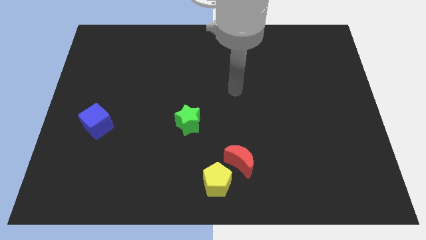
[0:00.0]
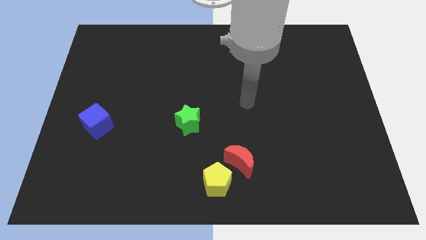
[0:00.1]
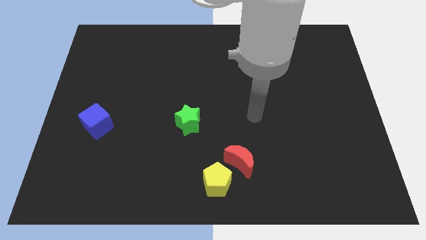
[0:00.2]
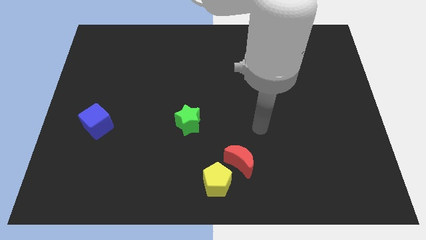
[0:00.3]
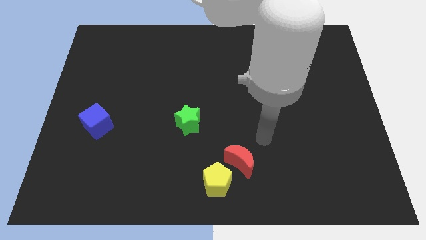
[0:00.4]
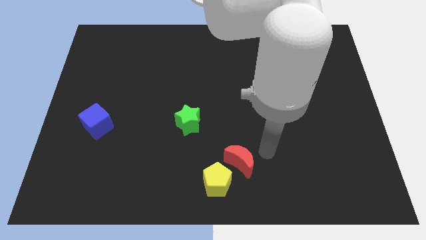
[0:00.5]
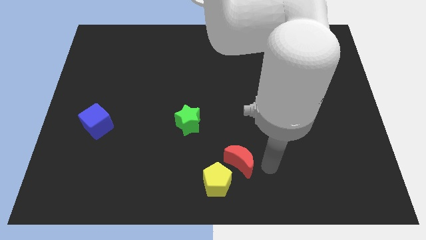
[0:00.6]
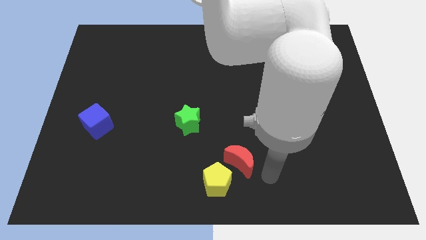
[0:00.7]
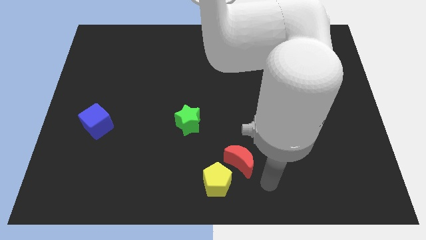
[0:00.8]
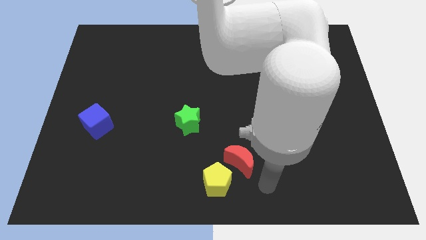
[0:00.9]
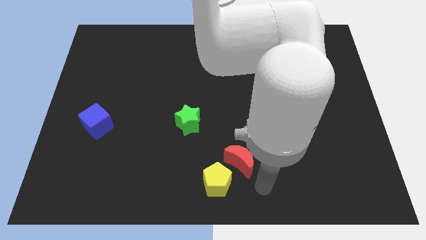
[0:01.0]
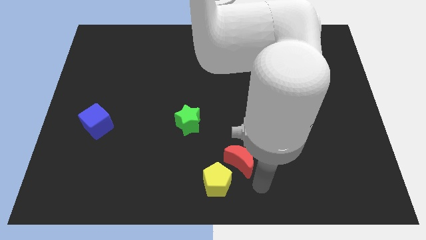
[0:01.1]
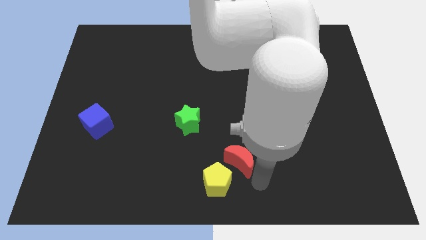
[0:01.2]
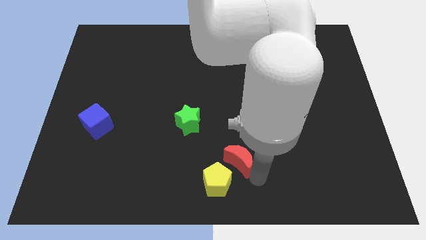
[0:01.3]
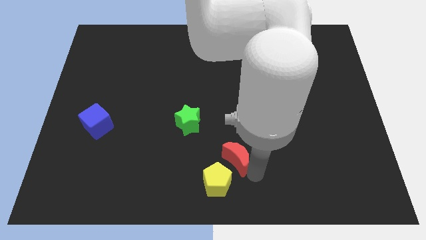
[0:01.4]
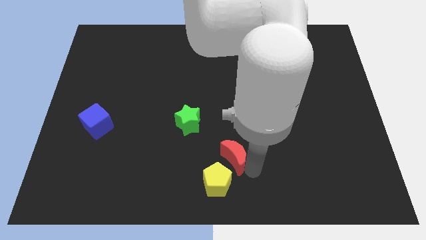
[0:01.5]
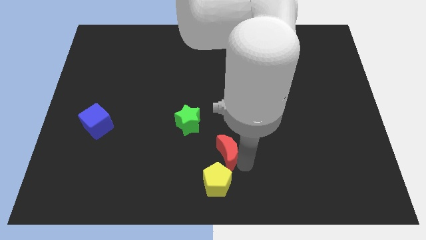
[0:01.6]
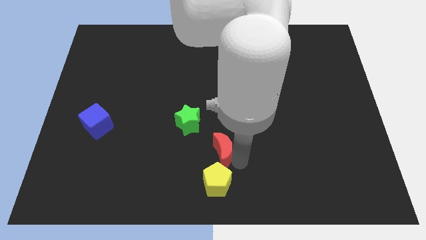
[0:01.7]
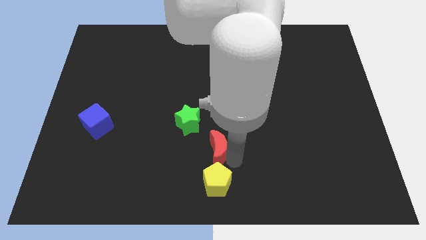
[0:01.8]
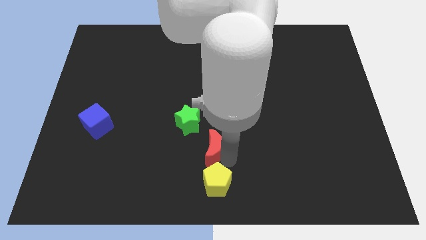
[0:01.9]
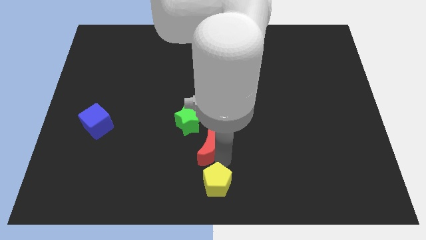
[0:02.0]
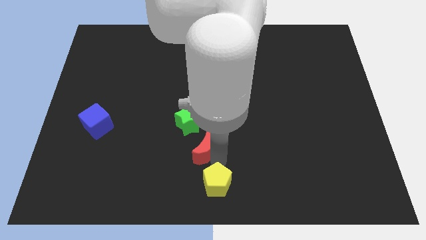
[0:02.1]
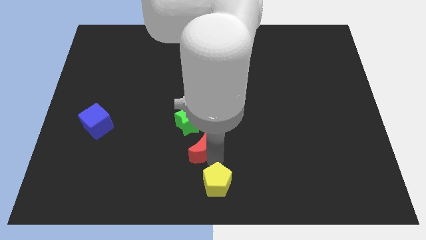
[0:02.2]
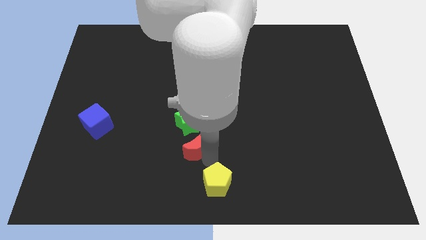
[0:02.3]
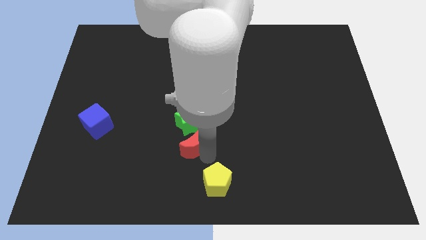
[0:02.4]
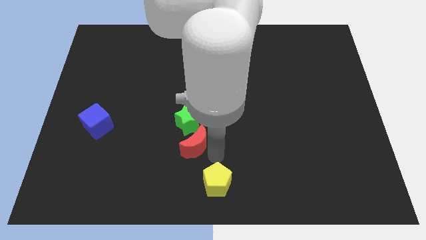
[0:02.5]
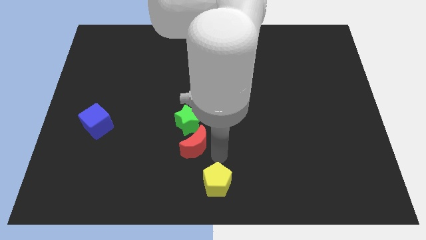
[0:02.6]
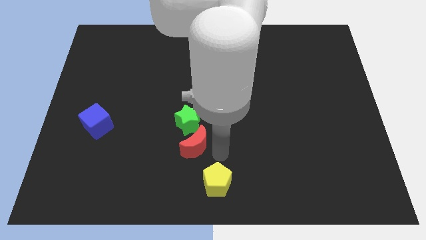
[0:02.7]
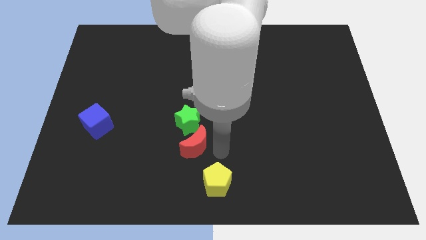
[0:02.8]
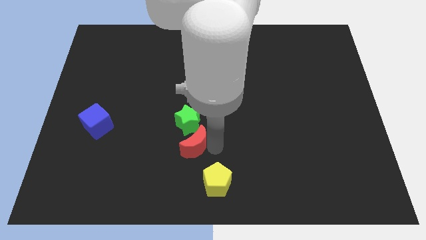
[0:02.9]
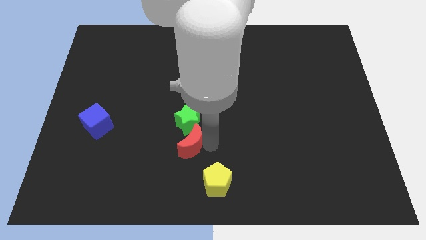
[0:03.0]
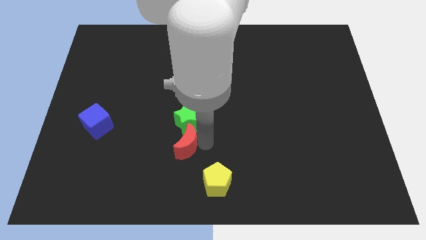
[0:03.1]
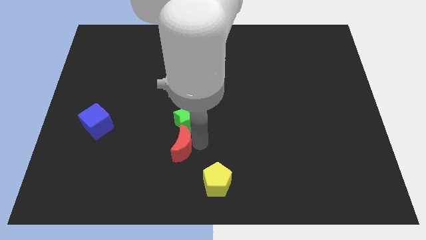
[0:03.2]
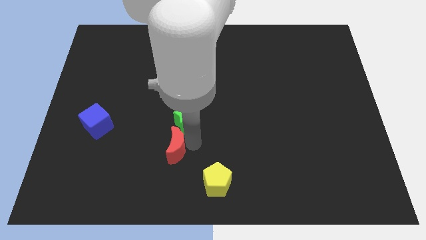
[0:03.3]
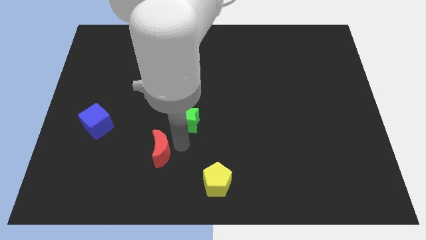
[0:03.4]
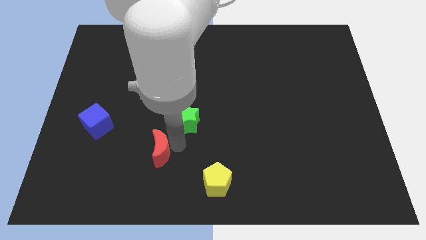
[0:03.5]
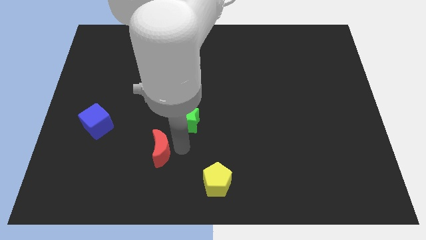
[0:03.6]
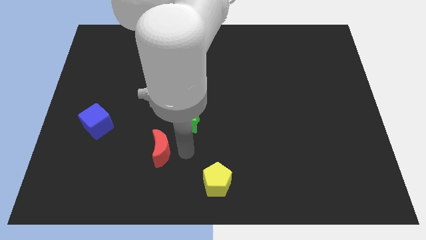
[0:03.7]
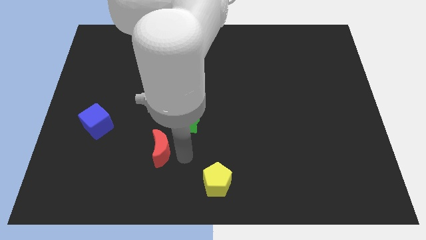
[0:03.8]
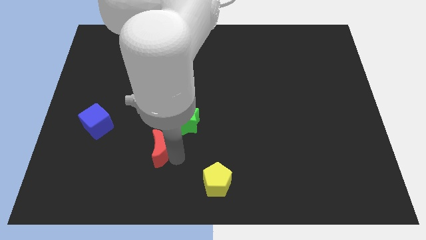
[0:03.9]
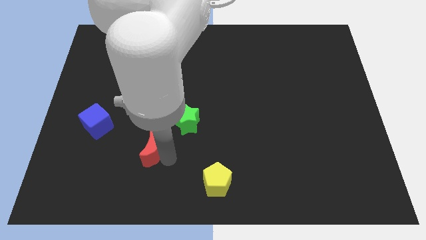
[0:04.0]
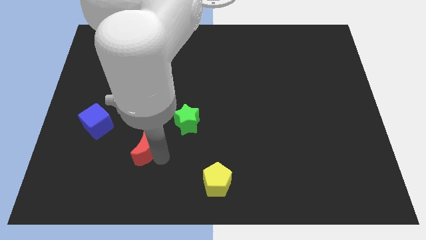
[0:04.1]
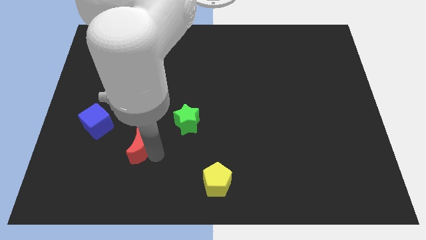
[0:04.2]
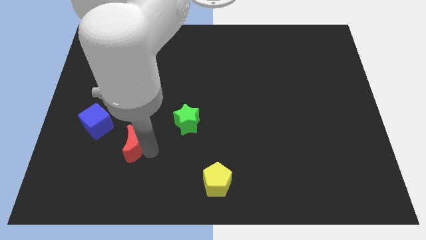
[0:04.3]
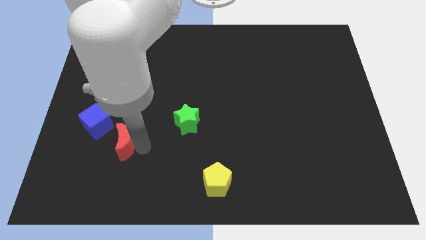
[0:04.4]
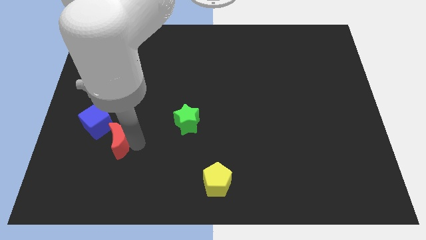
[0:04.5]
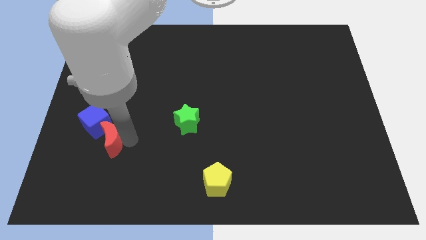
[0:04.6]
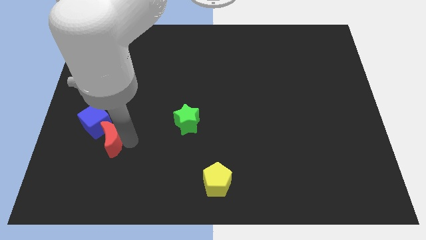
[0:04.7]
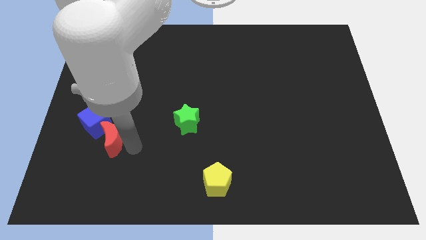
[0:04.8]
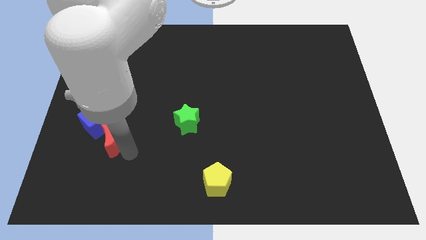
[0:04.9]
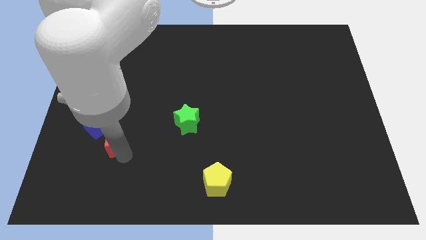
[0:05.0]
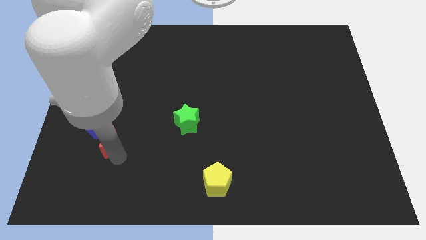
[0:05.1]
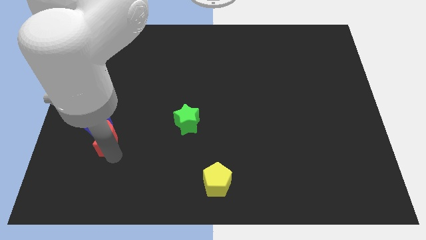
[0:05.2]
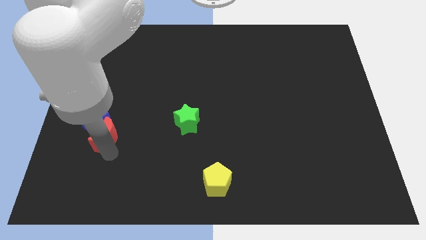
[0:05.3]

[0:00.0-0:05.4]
slide the moon next to the blue cube

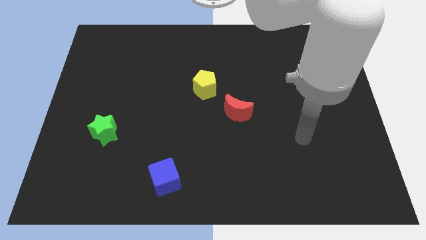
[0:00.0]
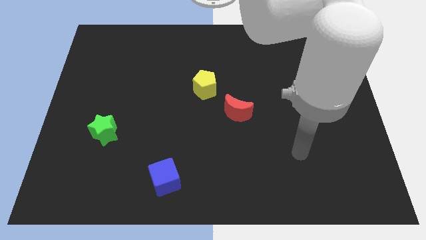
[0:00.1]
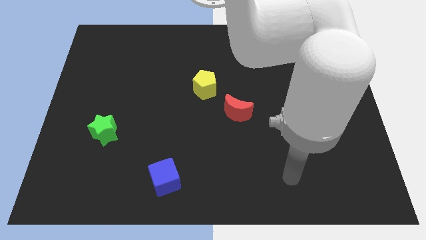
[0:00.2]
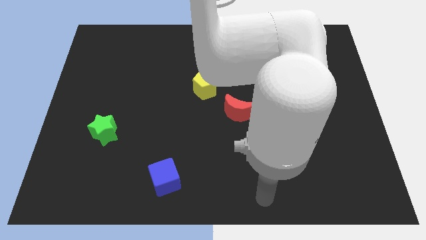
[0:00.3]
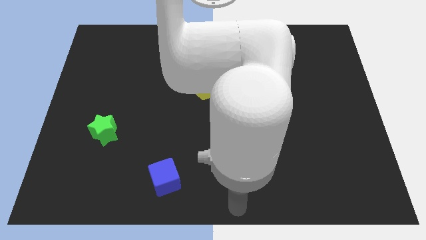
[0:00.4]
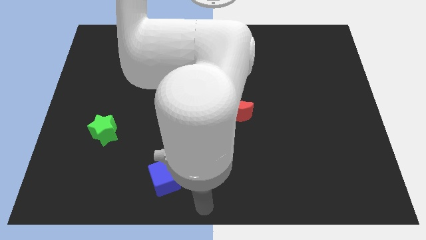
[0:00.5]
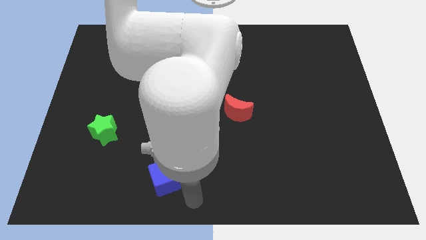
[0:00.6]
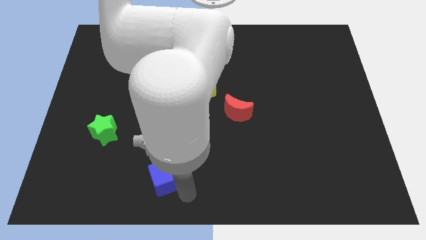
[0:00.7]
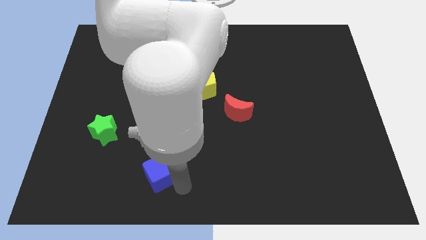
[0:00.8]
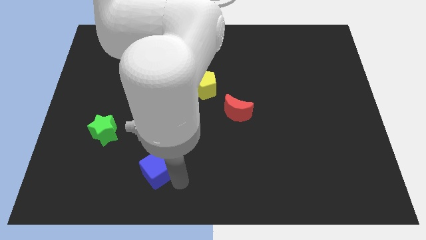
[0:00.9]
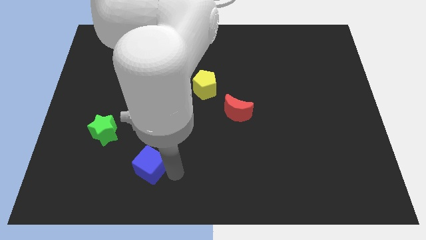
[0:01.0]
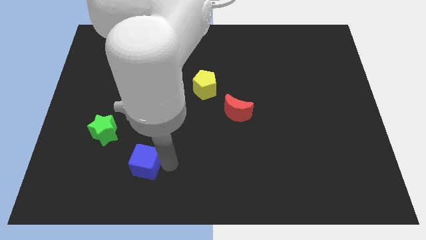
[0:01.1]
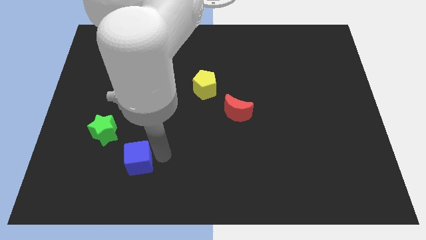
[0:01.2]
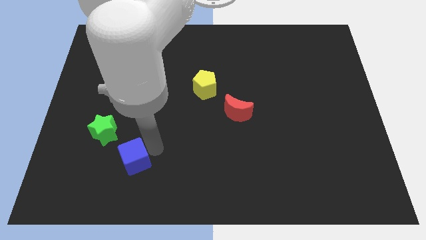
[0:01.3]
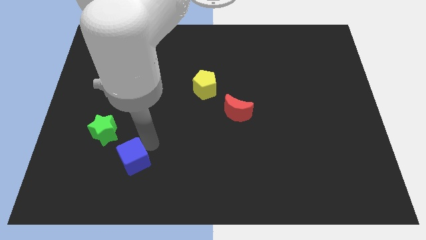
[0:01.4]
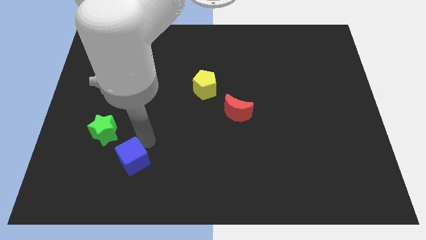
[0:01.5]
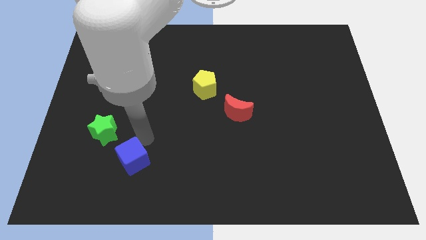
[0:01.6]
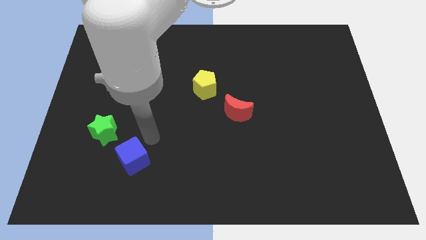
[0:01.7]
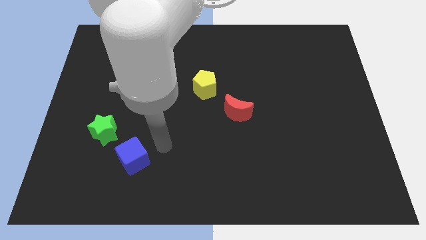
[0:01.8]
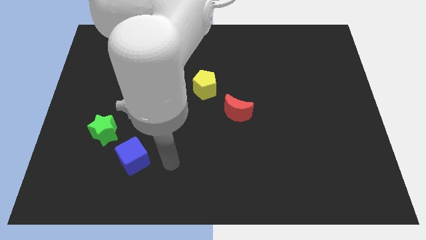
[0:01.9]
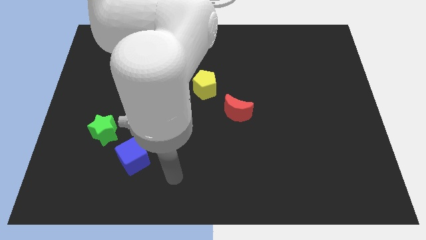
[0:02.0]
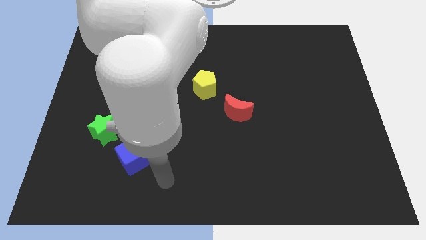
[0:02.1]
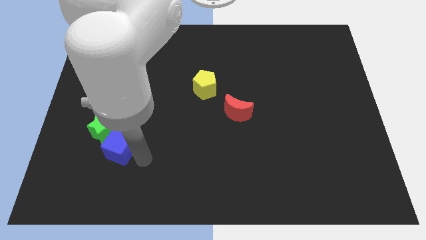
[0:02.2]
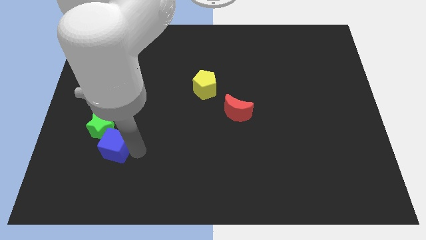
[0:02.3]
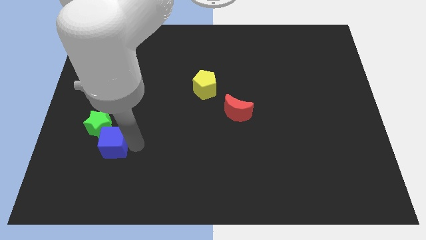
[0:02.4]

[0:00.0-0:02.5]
slide the cube to the green star

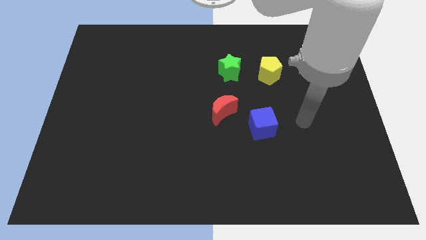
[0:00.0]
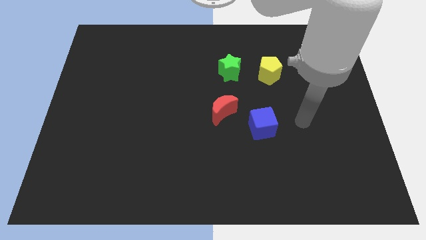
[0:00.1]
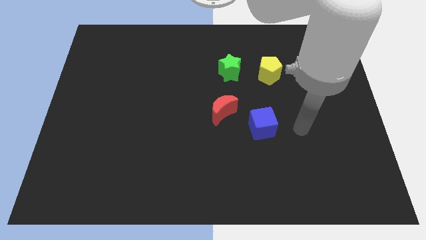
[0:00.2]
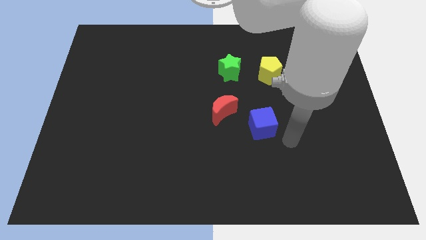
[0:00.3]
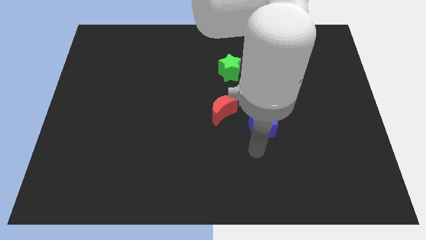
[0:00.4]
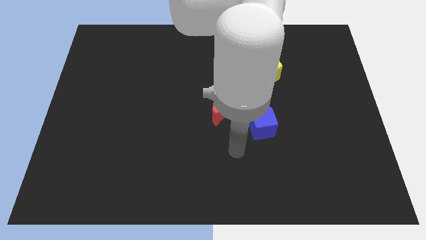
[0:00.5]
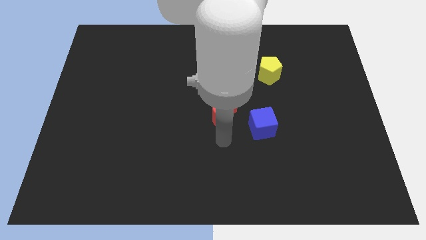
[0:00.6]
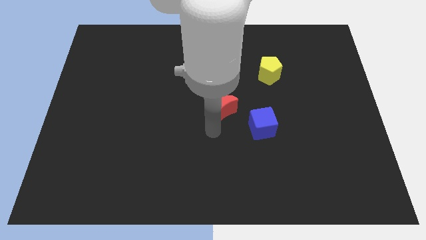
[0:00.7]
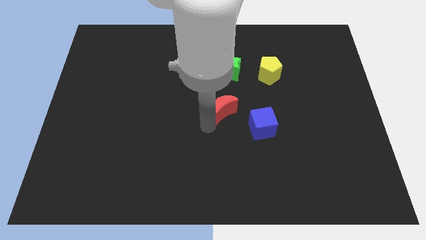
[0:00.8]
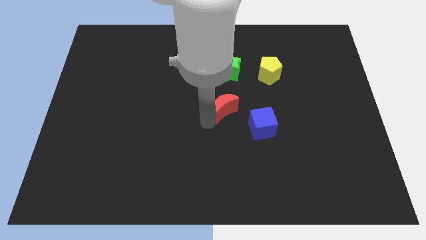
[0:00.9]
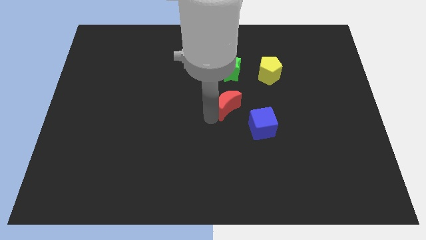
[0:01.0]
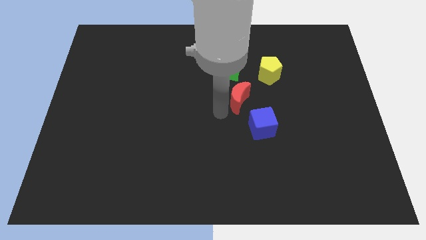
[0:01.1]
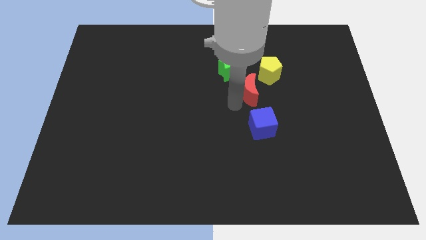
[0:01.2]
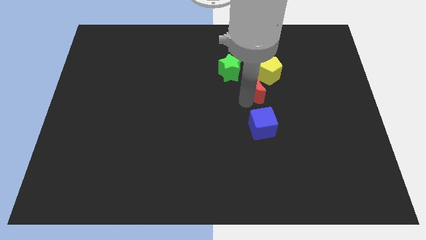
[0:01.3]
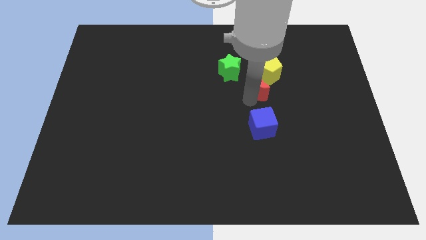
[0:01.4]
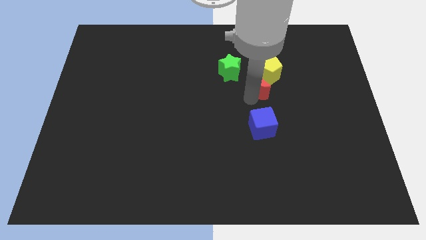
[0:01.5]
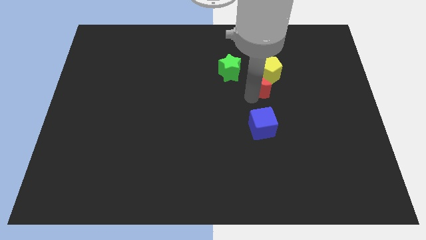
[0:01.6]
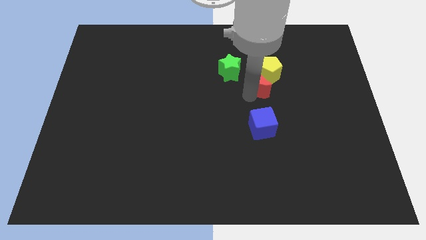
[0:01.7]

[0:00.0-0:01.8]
move the red block close to the yellow block
